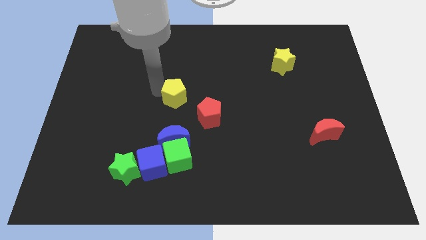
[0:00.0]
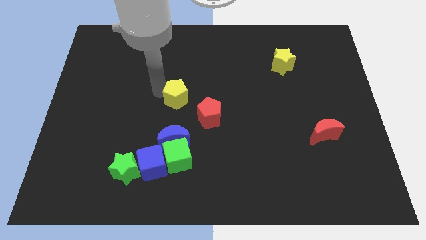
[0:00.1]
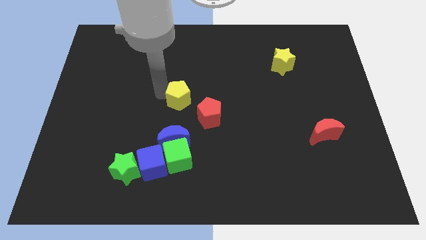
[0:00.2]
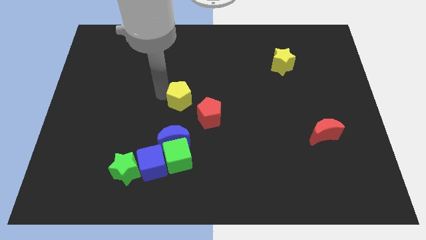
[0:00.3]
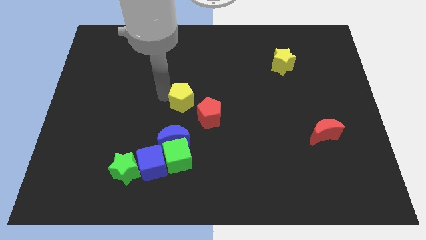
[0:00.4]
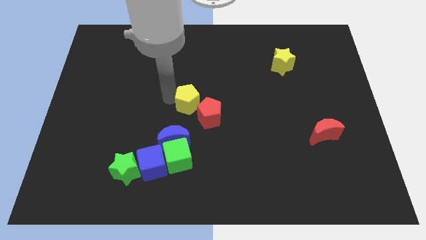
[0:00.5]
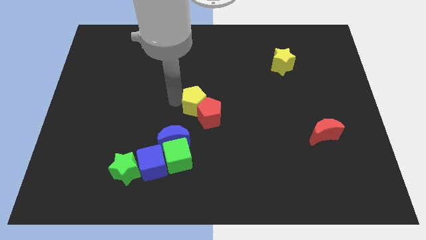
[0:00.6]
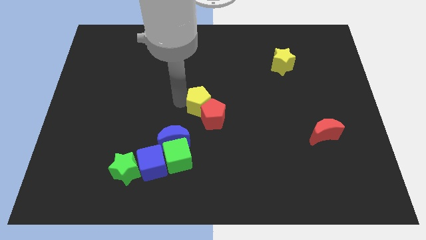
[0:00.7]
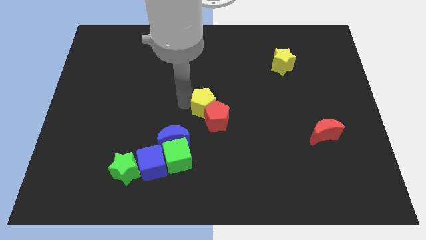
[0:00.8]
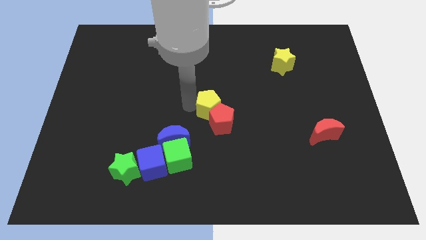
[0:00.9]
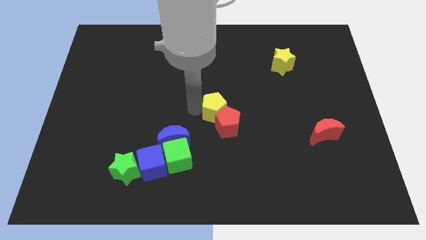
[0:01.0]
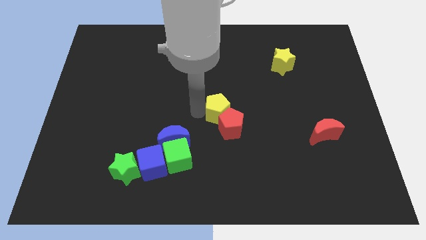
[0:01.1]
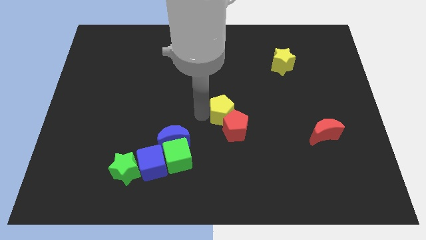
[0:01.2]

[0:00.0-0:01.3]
push yellow pentagon into red pentagon

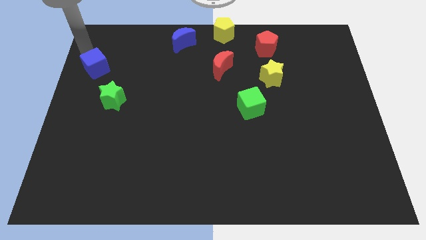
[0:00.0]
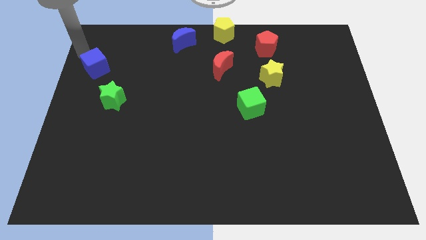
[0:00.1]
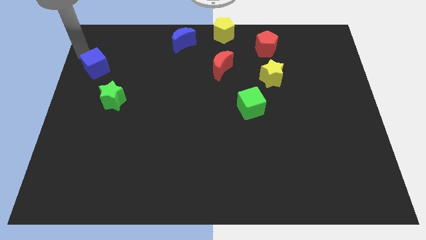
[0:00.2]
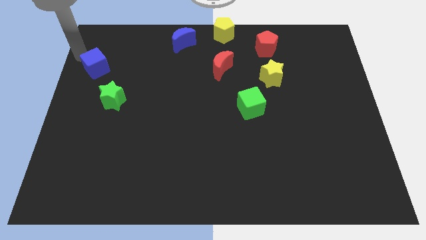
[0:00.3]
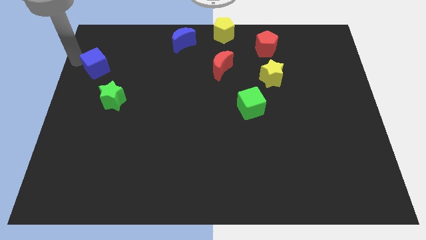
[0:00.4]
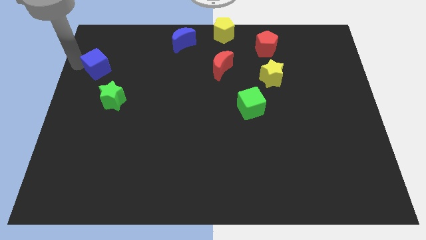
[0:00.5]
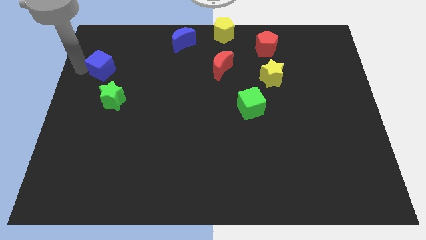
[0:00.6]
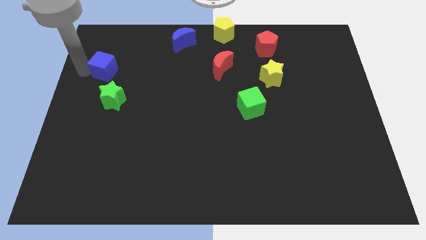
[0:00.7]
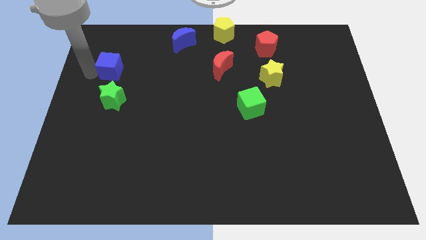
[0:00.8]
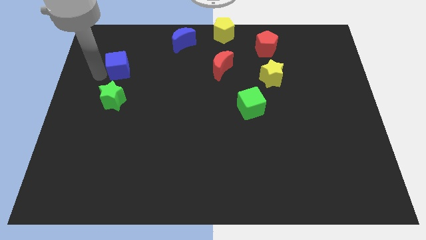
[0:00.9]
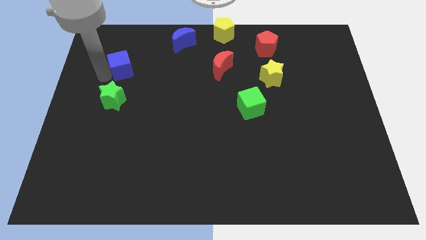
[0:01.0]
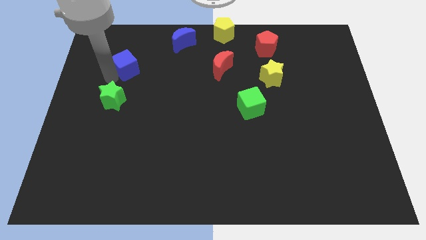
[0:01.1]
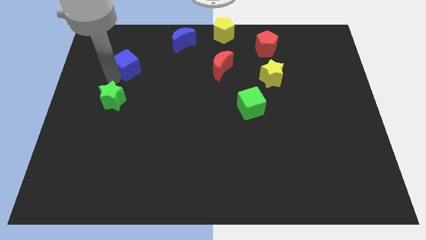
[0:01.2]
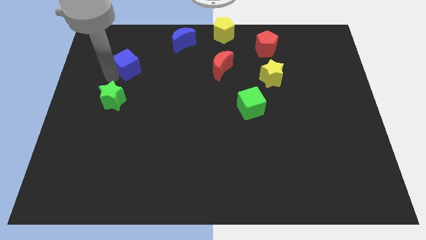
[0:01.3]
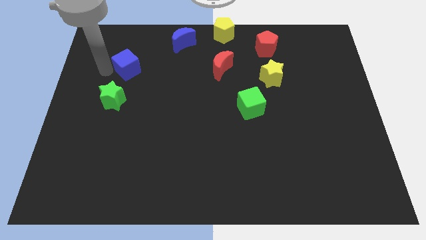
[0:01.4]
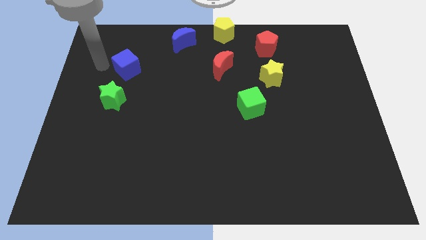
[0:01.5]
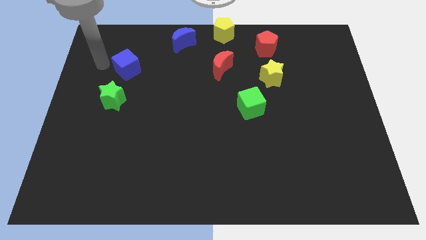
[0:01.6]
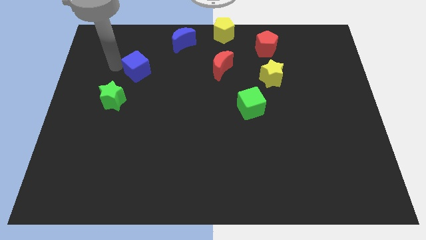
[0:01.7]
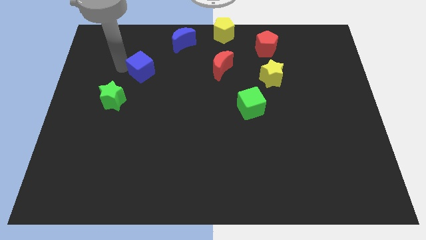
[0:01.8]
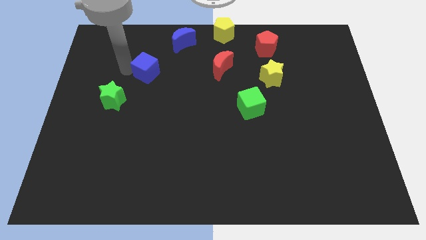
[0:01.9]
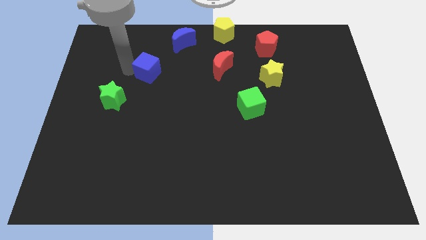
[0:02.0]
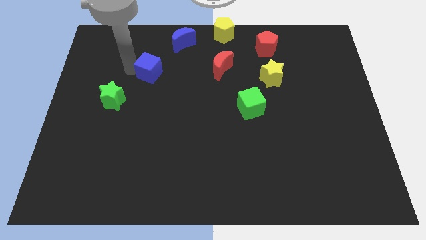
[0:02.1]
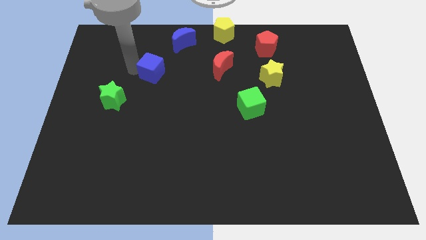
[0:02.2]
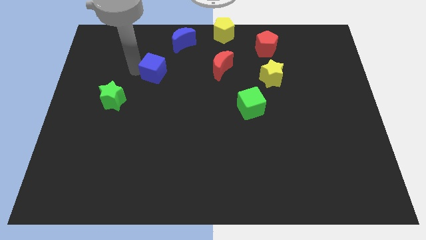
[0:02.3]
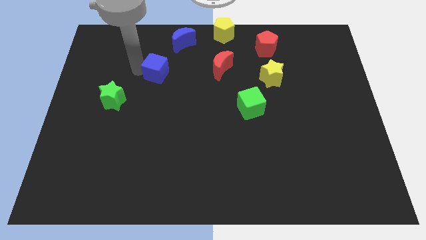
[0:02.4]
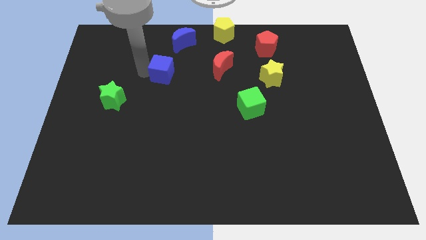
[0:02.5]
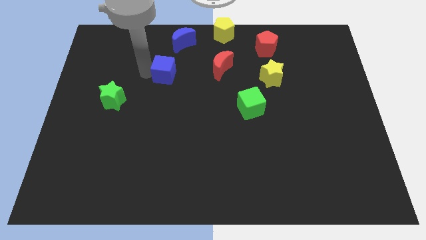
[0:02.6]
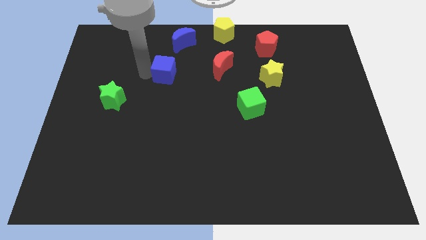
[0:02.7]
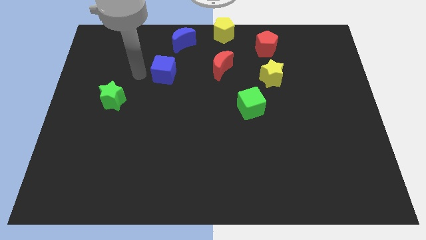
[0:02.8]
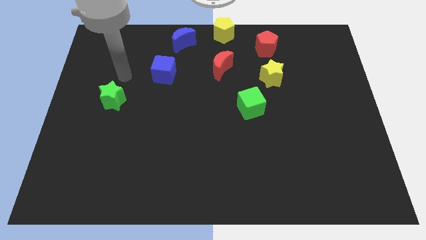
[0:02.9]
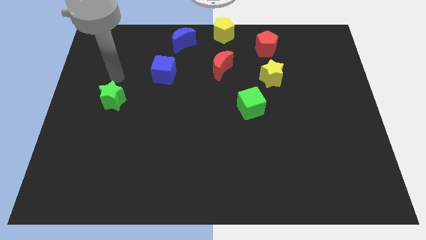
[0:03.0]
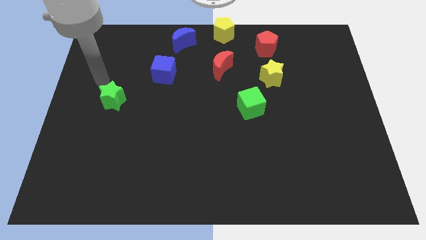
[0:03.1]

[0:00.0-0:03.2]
place blue cube below blue crescent

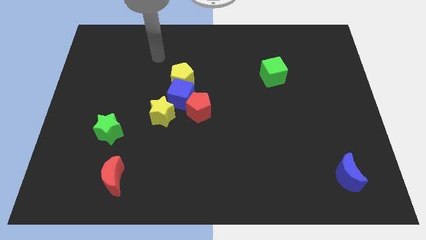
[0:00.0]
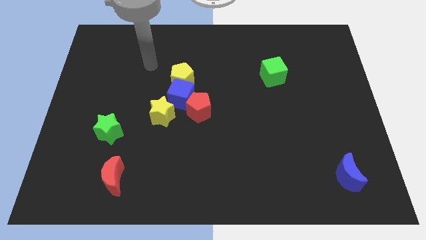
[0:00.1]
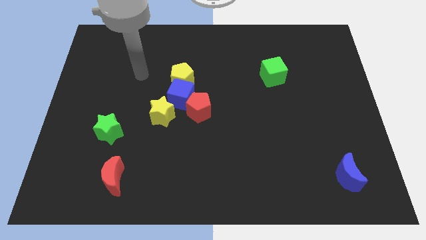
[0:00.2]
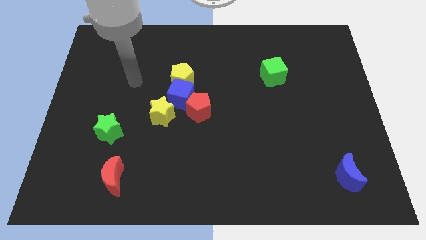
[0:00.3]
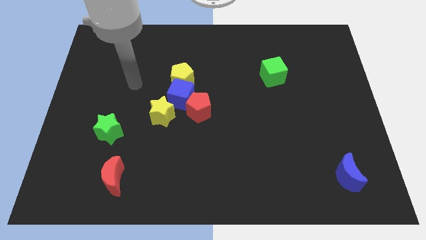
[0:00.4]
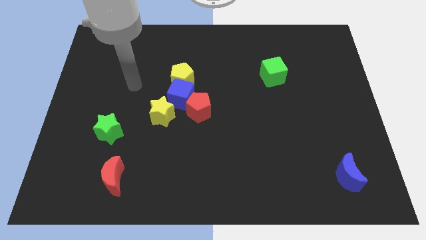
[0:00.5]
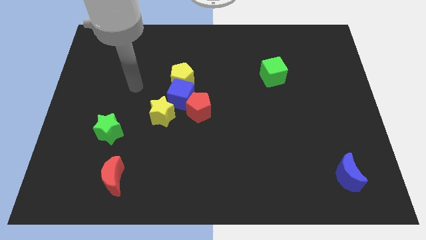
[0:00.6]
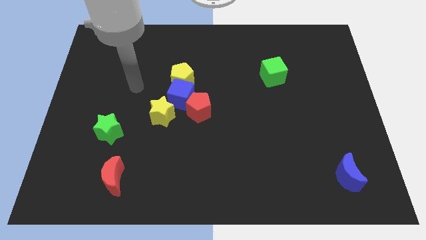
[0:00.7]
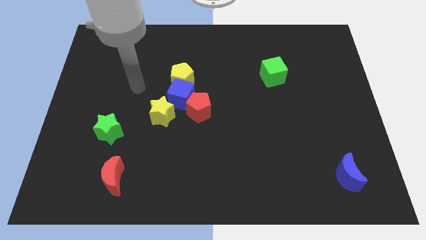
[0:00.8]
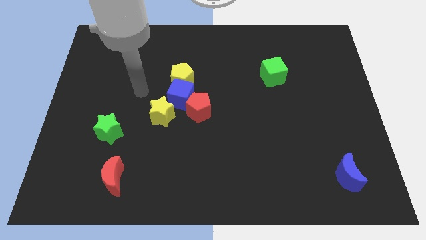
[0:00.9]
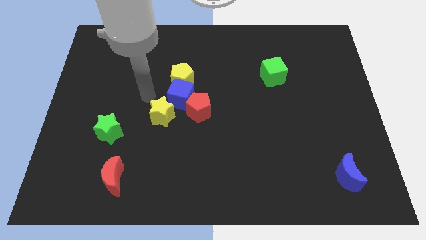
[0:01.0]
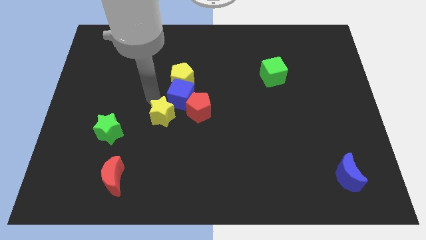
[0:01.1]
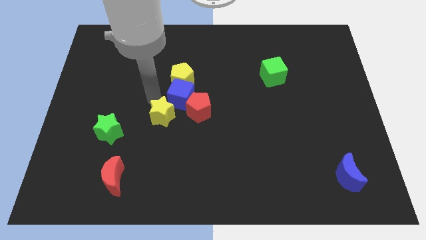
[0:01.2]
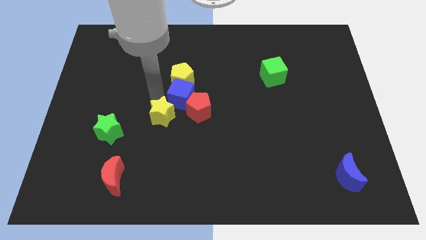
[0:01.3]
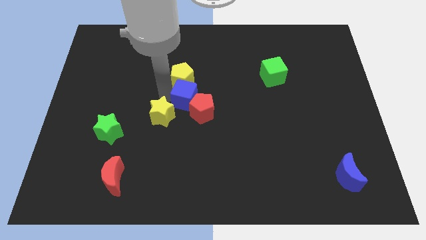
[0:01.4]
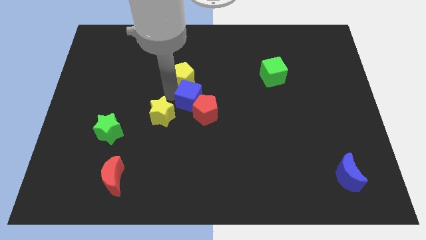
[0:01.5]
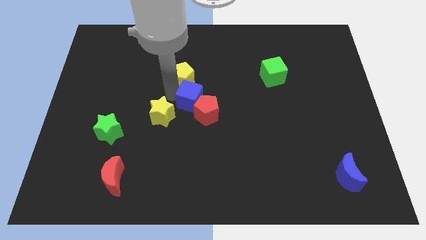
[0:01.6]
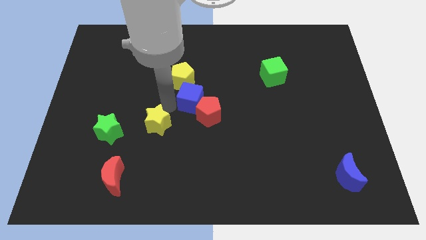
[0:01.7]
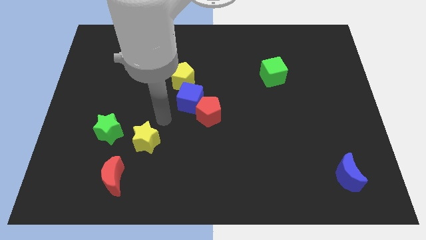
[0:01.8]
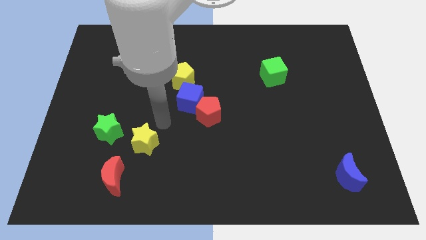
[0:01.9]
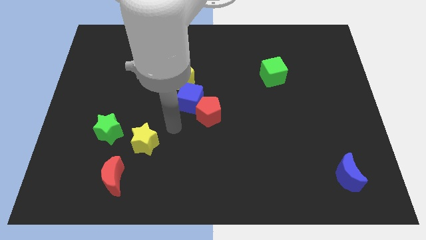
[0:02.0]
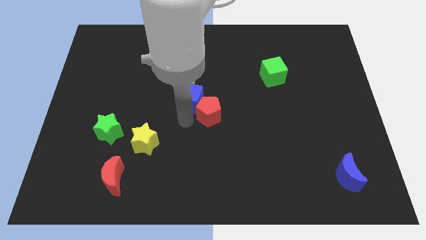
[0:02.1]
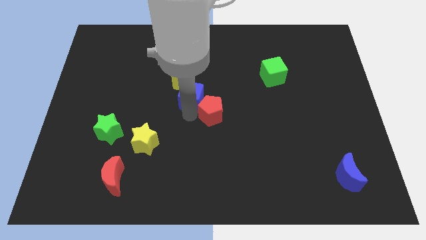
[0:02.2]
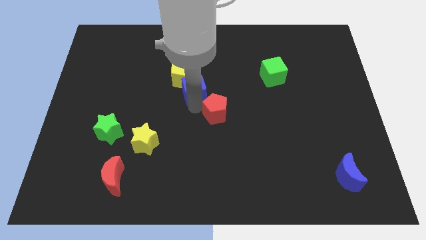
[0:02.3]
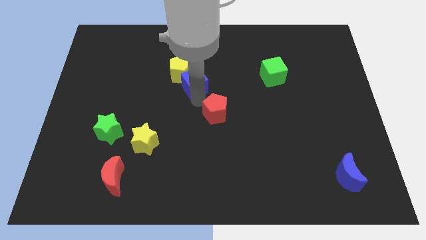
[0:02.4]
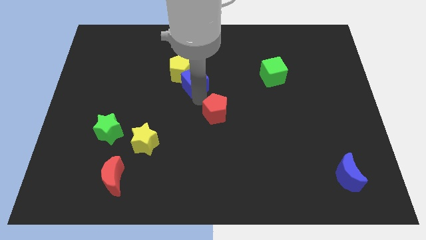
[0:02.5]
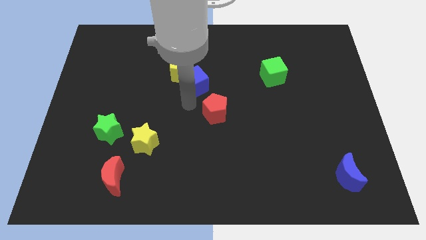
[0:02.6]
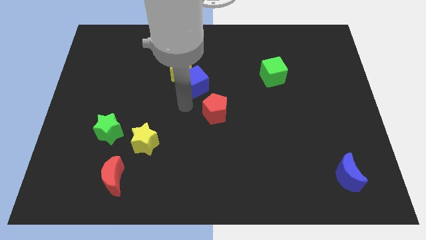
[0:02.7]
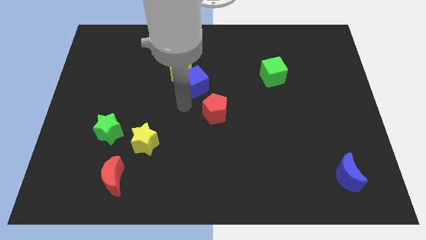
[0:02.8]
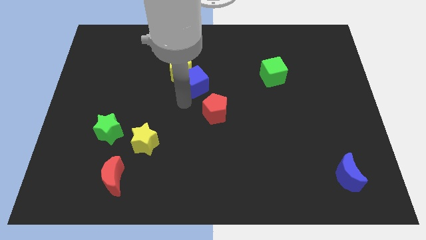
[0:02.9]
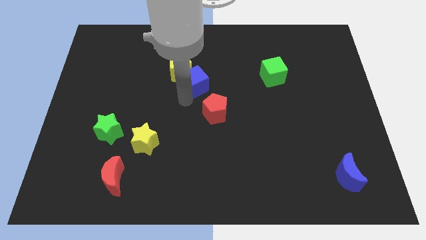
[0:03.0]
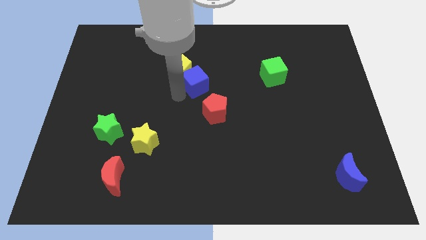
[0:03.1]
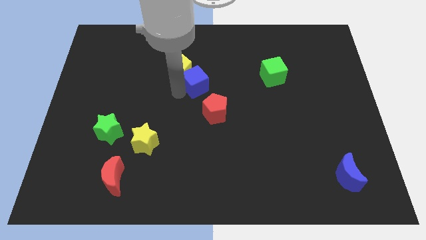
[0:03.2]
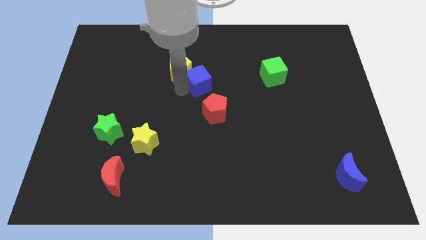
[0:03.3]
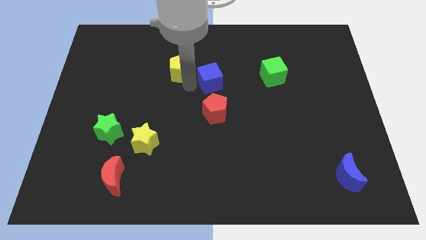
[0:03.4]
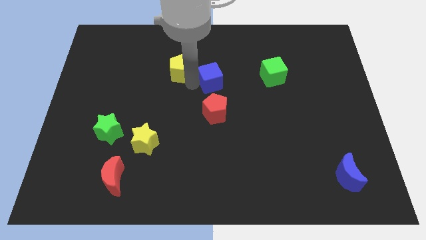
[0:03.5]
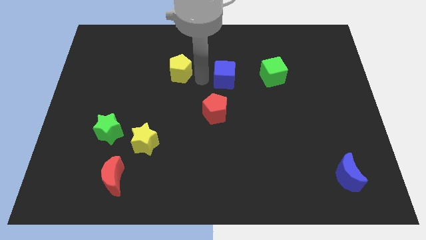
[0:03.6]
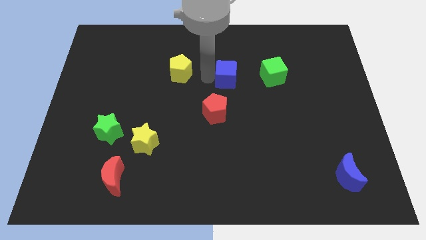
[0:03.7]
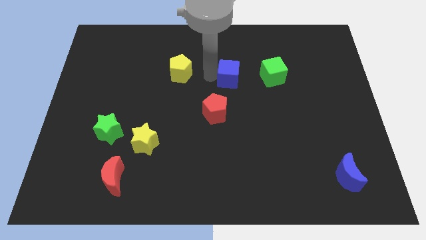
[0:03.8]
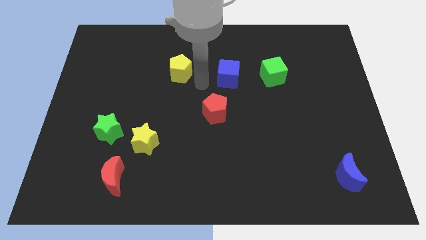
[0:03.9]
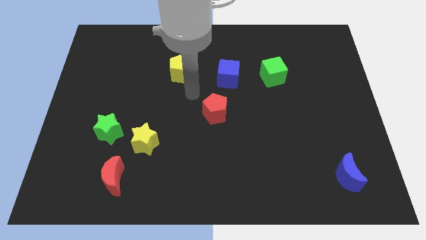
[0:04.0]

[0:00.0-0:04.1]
move the blue cube to the left of the green cube

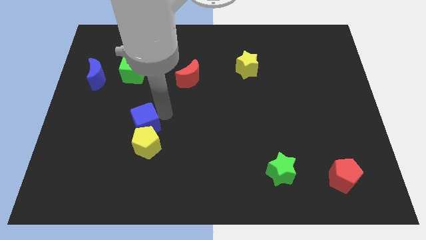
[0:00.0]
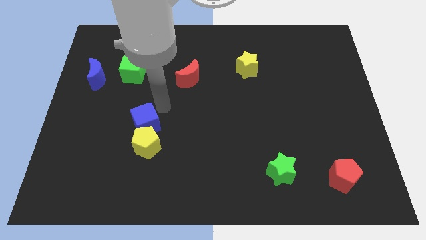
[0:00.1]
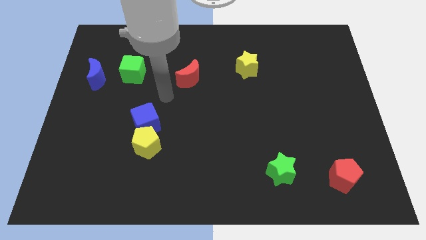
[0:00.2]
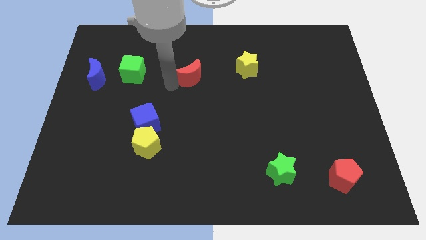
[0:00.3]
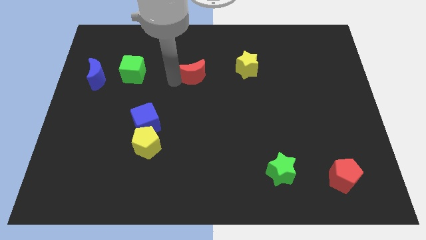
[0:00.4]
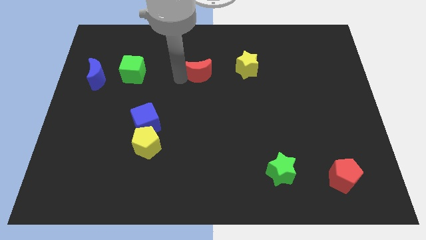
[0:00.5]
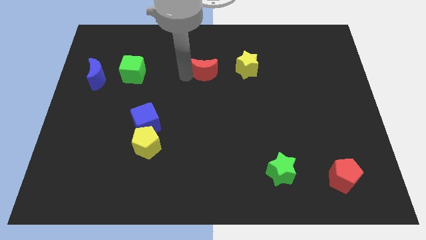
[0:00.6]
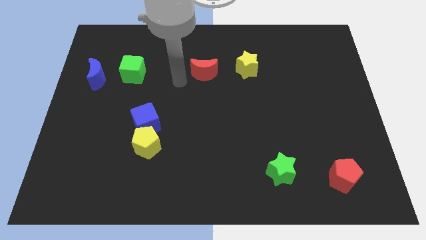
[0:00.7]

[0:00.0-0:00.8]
push the red crescent slightly to the right
